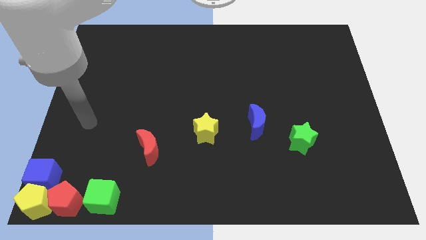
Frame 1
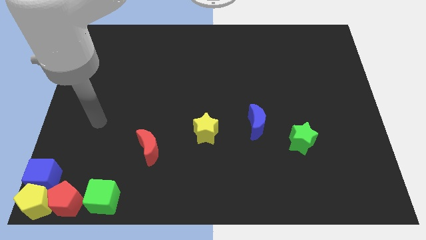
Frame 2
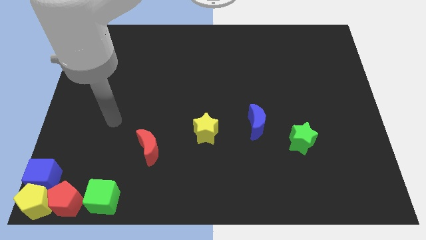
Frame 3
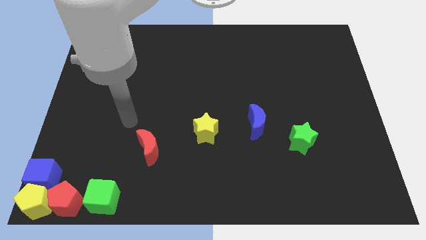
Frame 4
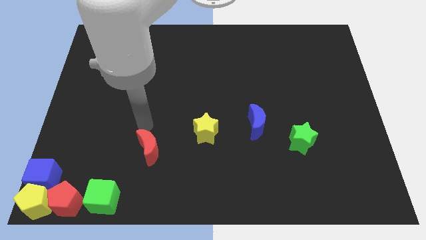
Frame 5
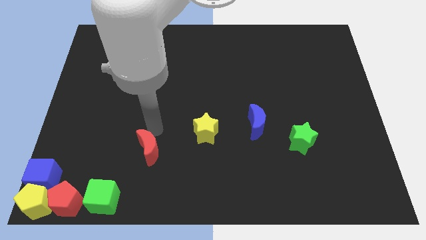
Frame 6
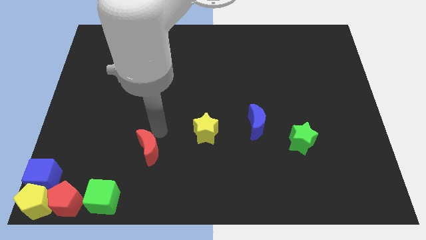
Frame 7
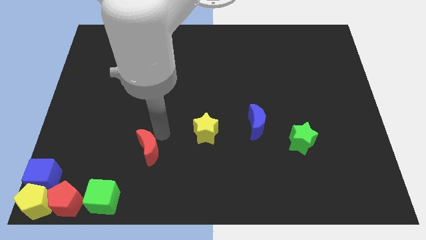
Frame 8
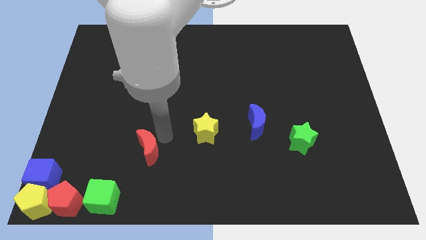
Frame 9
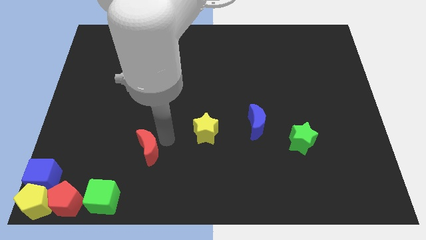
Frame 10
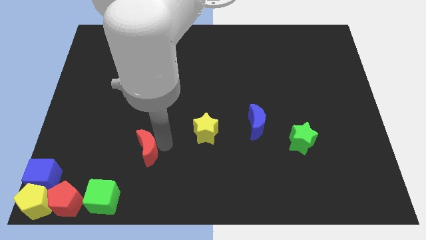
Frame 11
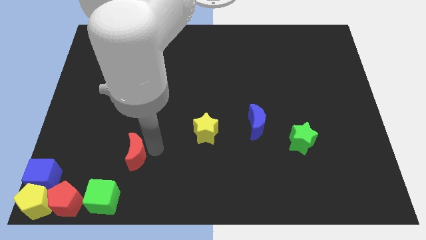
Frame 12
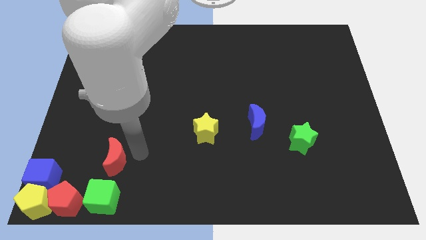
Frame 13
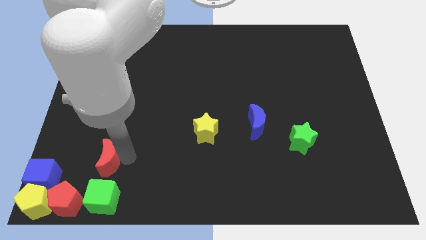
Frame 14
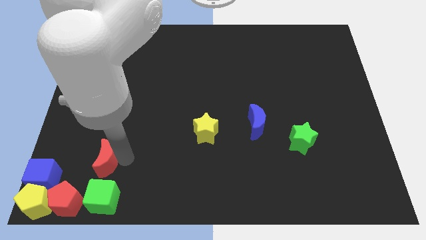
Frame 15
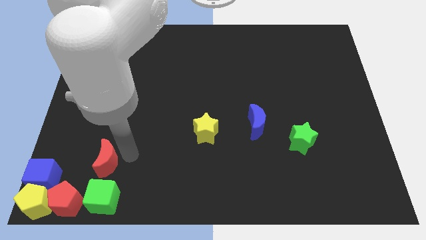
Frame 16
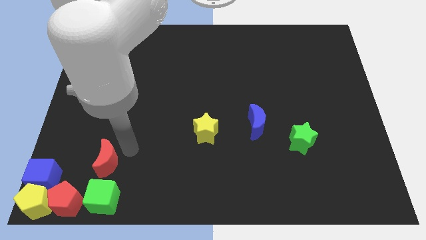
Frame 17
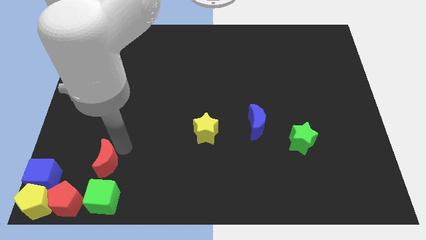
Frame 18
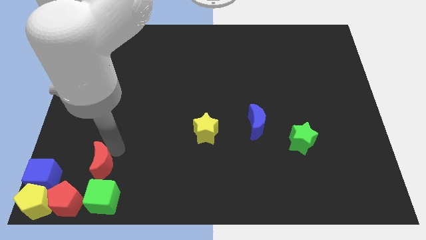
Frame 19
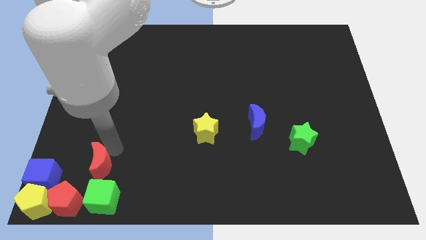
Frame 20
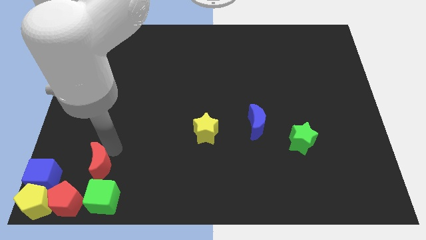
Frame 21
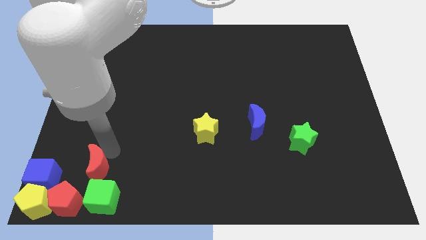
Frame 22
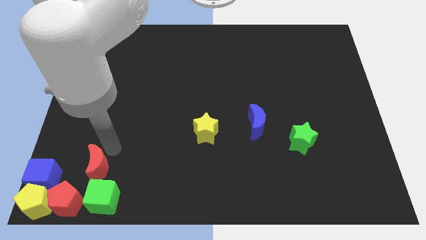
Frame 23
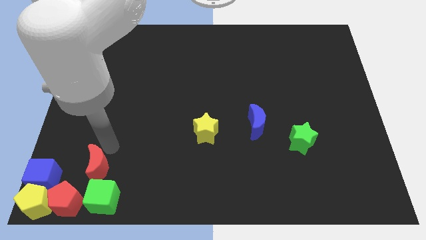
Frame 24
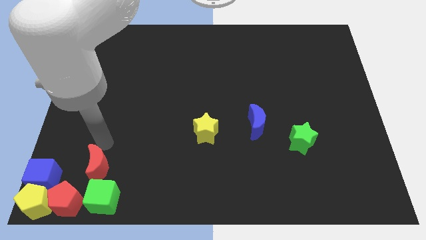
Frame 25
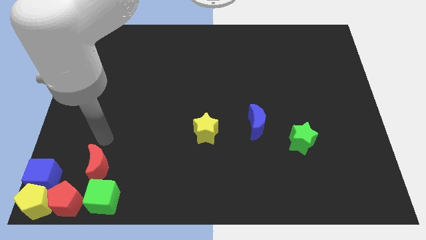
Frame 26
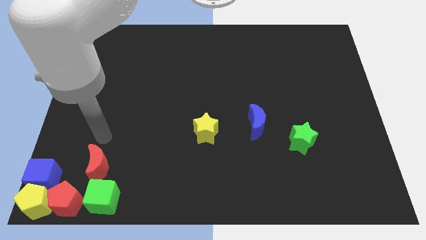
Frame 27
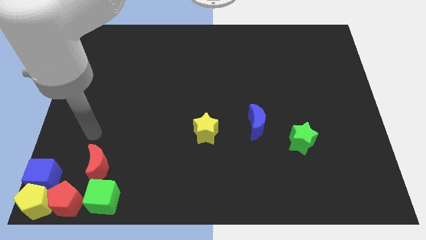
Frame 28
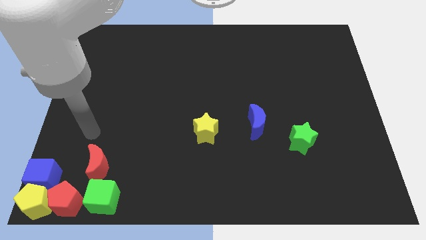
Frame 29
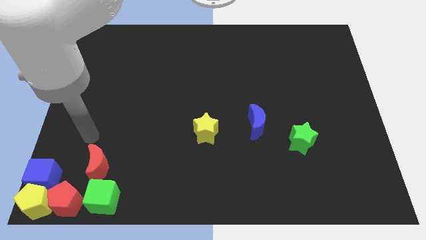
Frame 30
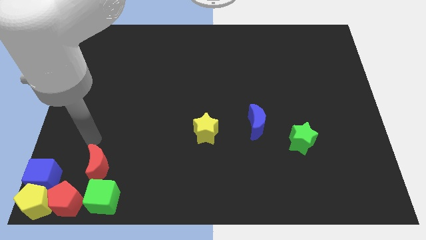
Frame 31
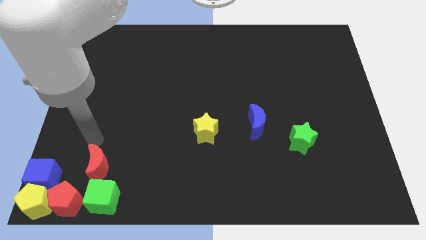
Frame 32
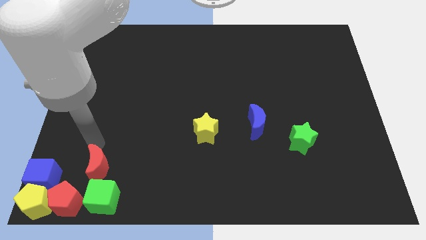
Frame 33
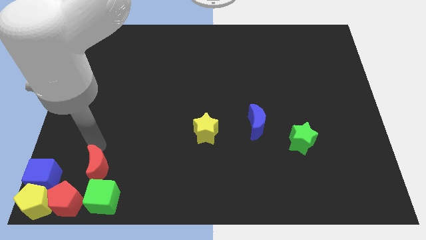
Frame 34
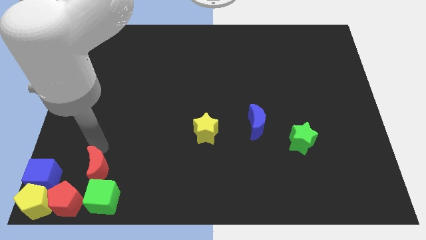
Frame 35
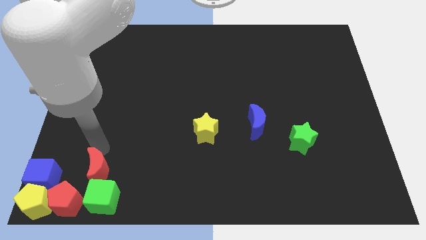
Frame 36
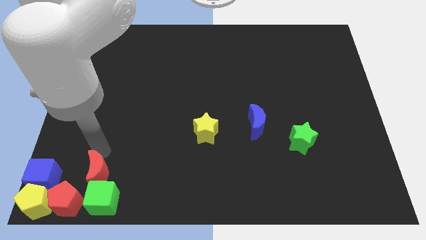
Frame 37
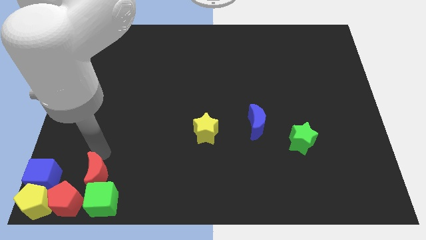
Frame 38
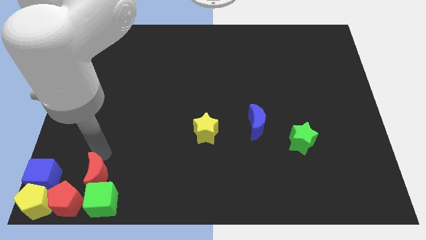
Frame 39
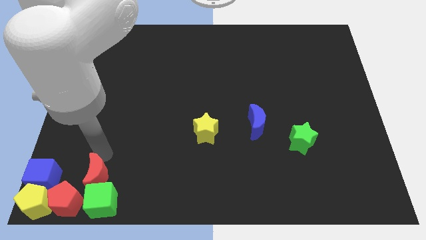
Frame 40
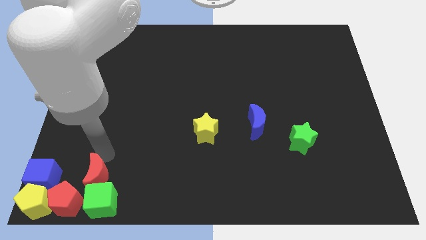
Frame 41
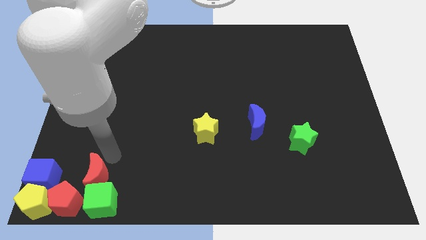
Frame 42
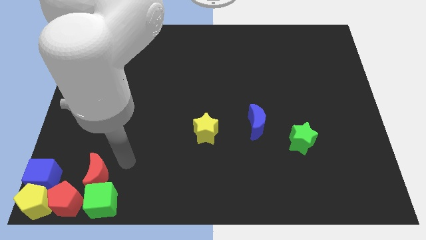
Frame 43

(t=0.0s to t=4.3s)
push the red crescent into the green cube

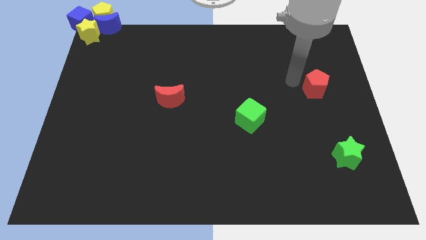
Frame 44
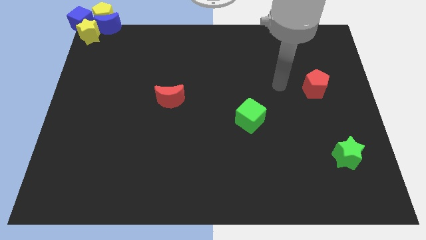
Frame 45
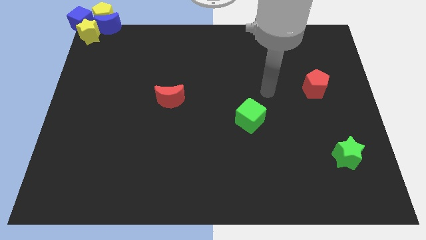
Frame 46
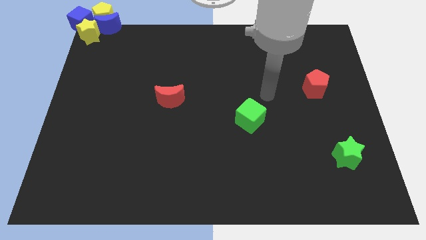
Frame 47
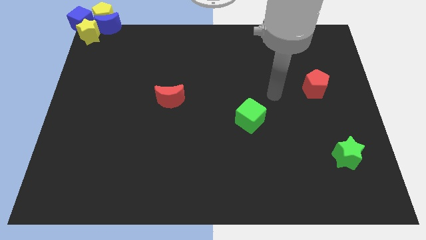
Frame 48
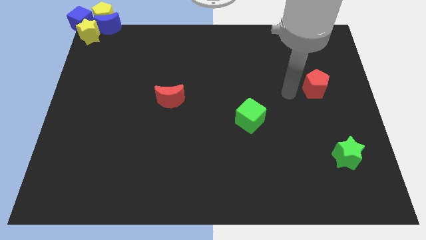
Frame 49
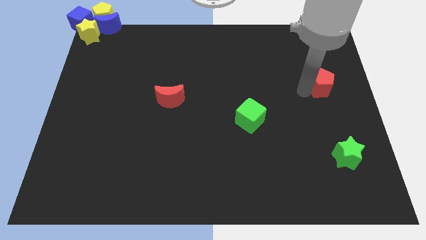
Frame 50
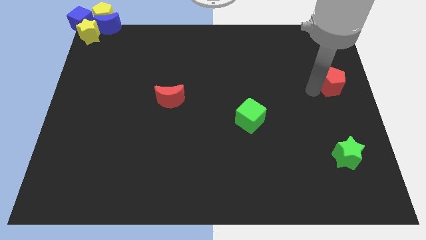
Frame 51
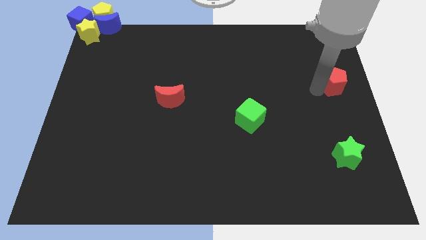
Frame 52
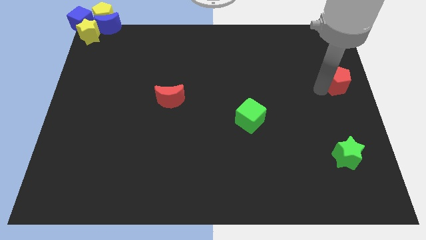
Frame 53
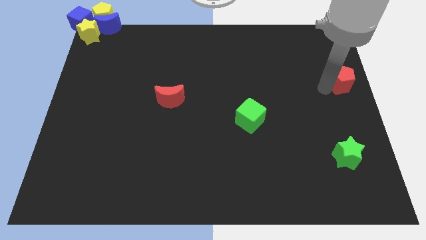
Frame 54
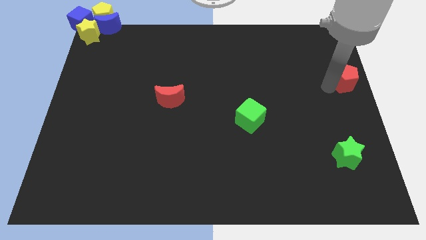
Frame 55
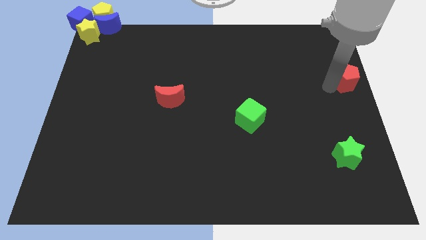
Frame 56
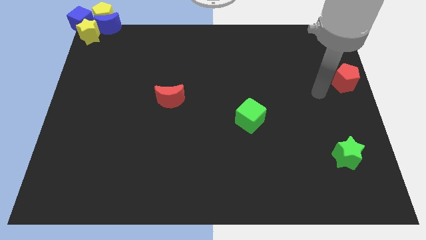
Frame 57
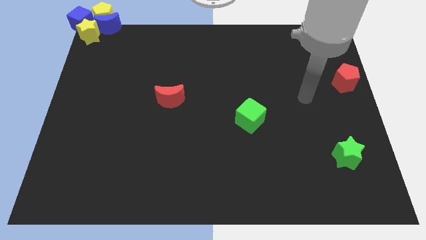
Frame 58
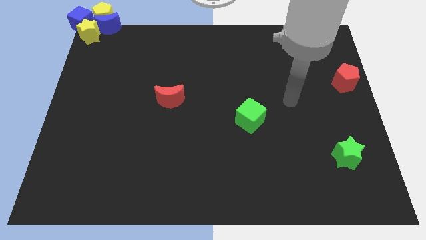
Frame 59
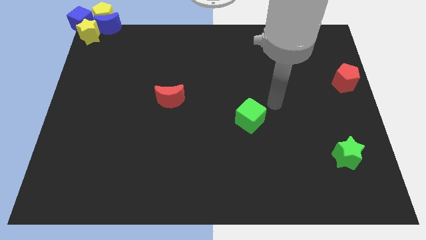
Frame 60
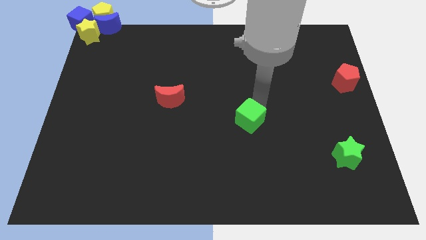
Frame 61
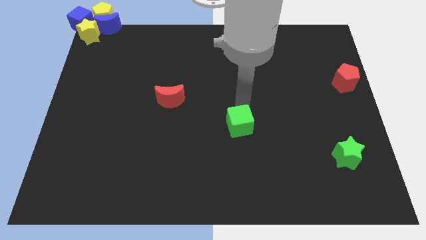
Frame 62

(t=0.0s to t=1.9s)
drag red pentagon towards center right of the board

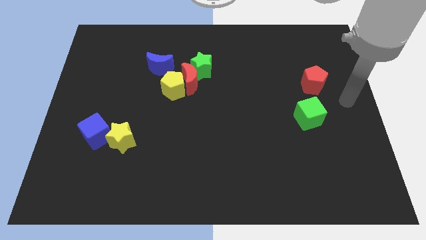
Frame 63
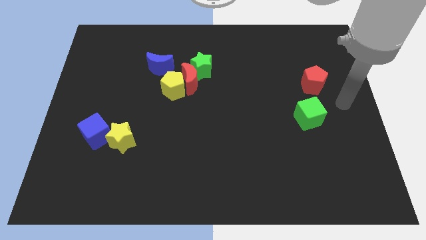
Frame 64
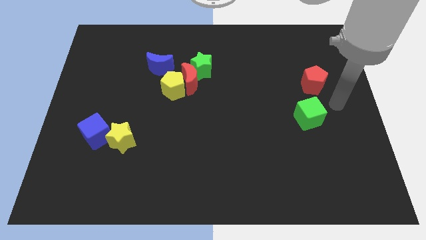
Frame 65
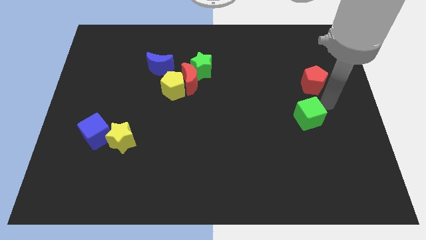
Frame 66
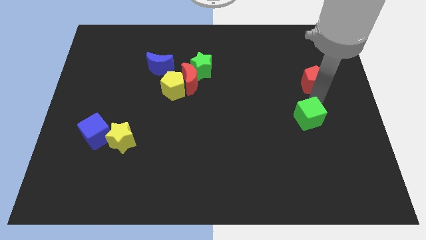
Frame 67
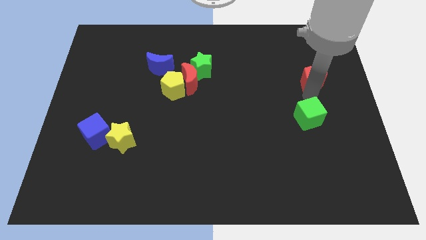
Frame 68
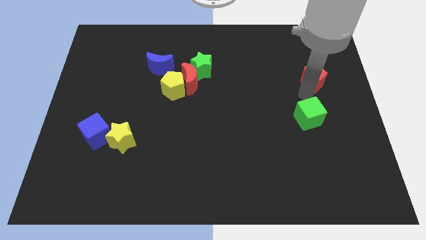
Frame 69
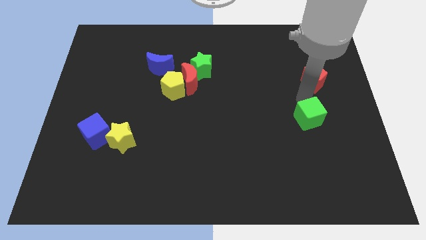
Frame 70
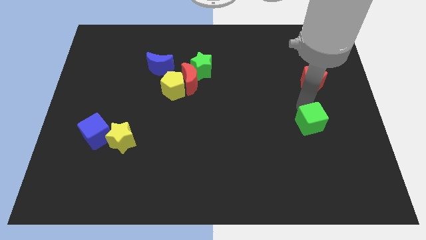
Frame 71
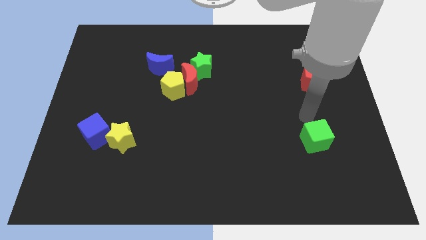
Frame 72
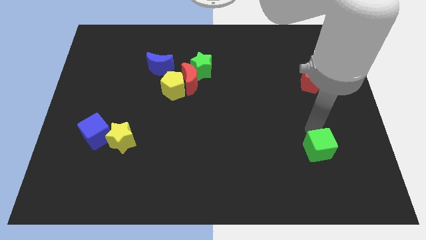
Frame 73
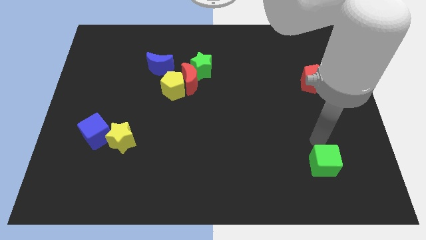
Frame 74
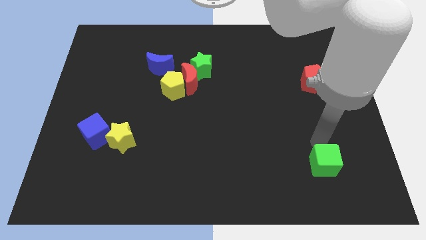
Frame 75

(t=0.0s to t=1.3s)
slide the green cube down slightly

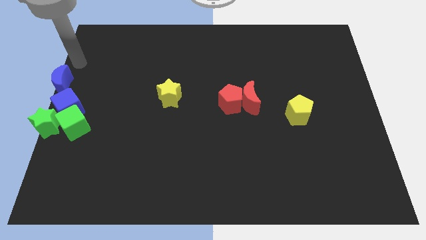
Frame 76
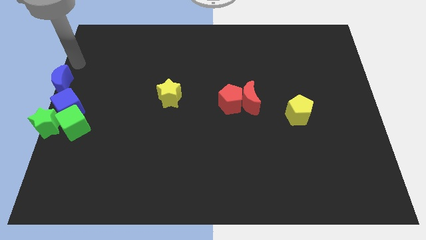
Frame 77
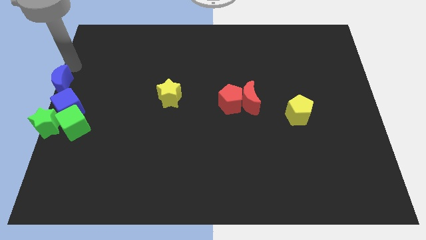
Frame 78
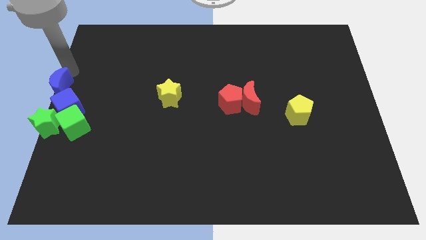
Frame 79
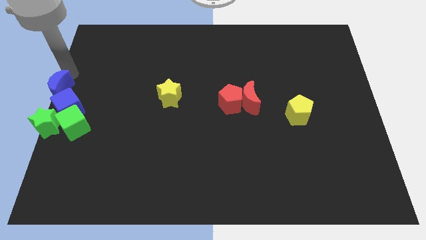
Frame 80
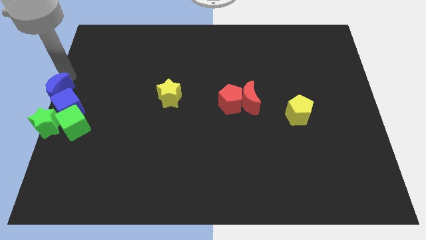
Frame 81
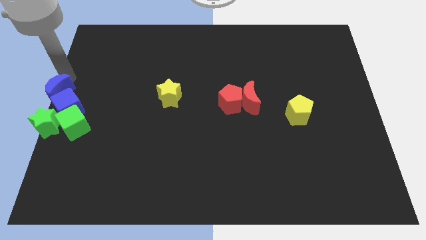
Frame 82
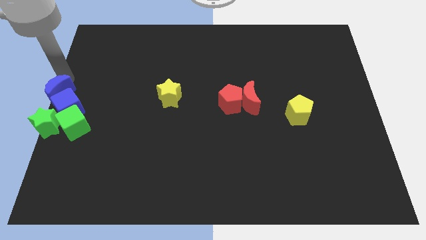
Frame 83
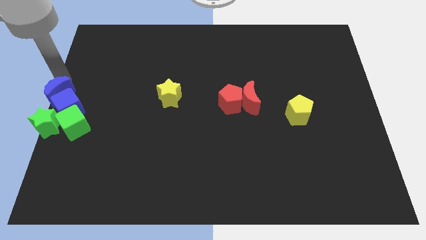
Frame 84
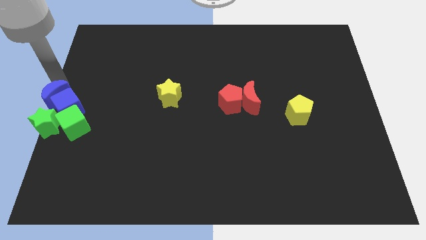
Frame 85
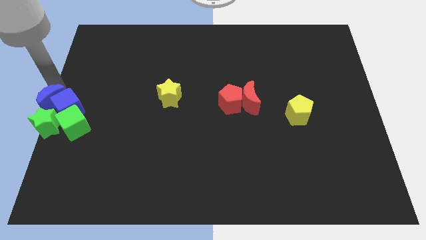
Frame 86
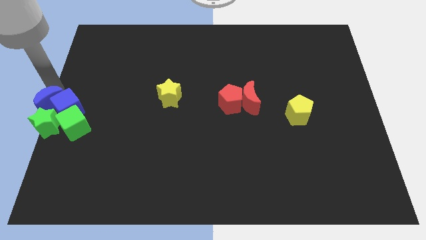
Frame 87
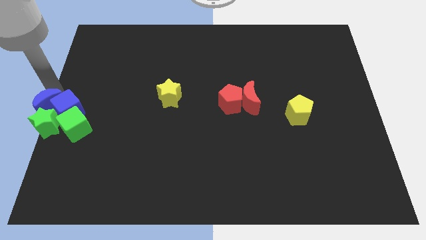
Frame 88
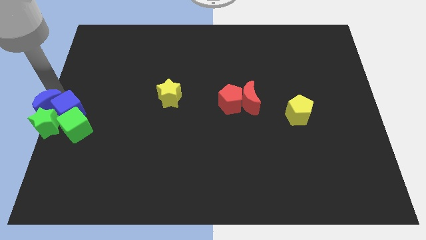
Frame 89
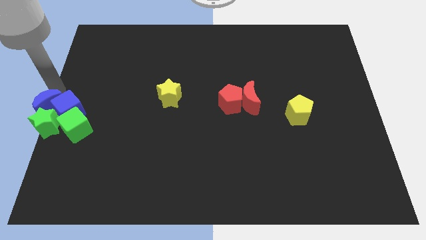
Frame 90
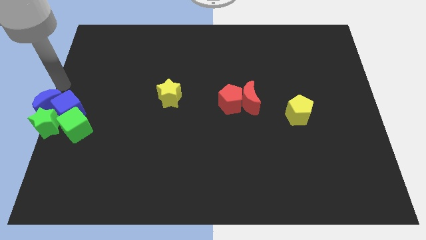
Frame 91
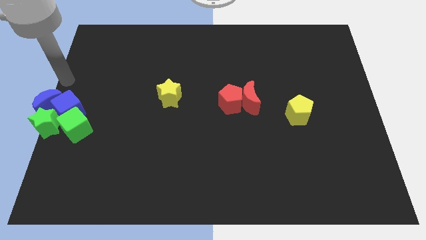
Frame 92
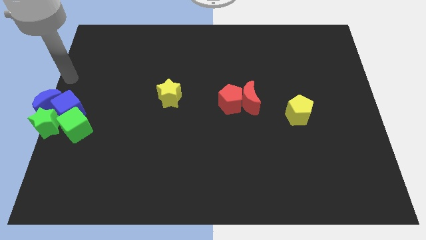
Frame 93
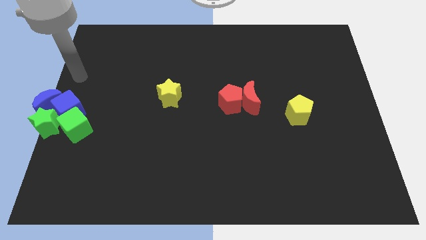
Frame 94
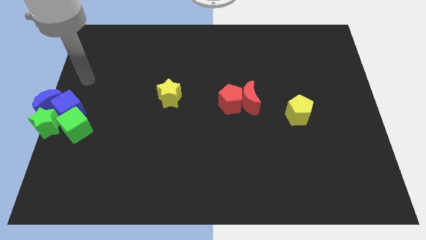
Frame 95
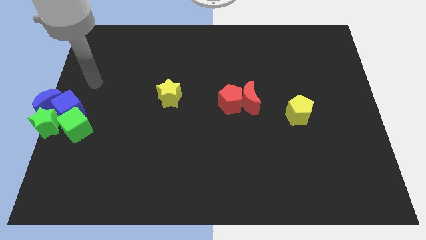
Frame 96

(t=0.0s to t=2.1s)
move blue moon above green star
